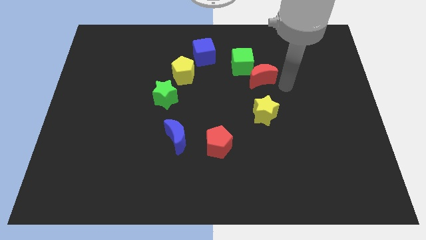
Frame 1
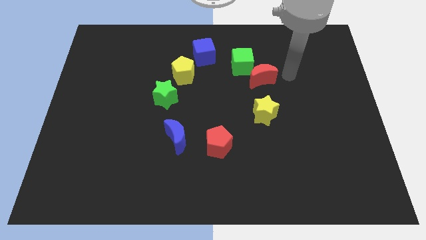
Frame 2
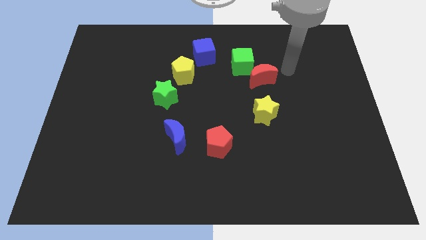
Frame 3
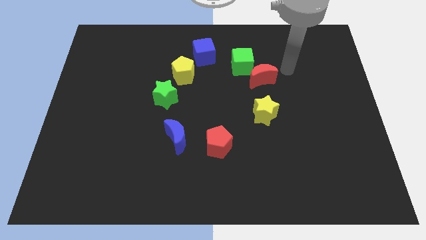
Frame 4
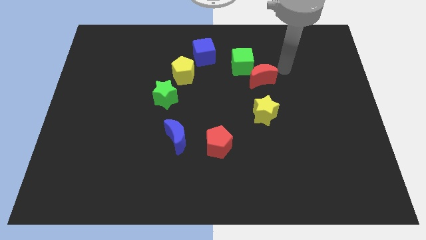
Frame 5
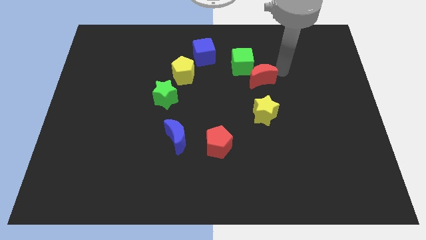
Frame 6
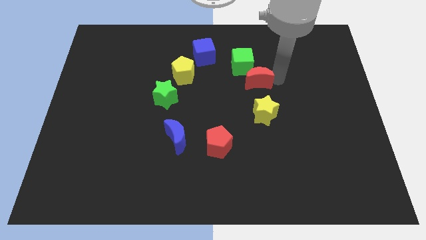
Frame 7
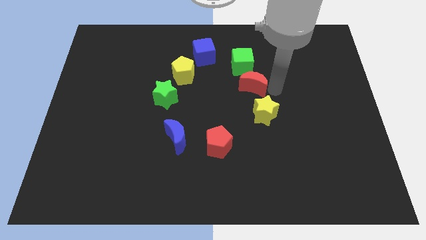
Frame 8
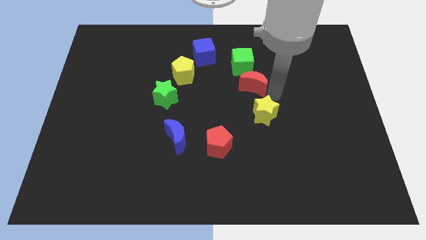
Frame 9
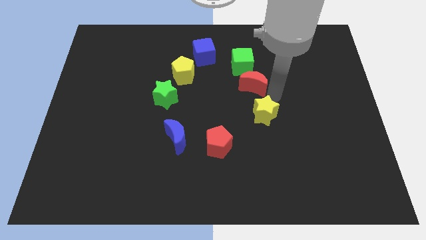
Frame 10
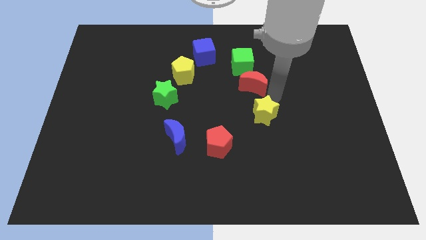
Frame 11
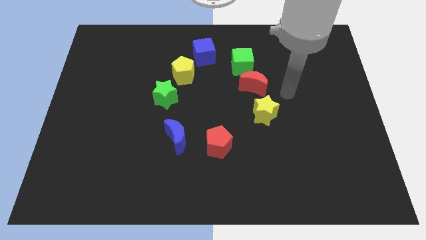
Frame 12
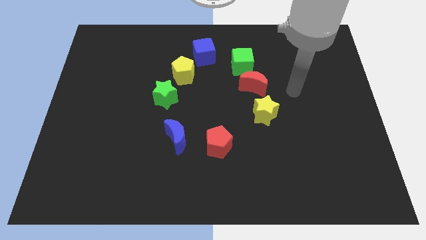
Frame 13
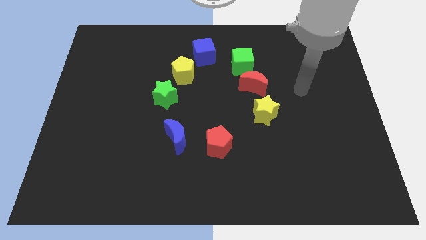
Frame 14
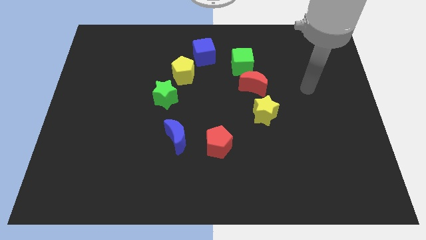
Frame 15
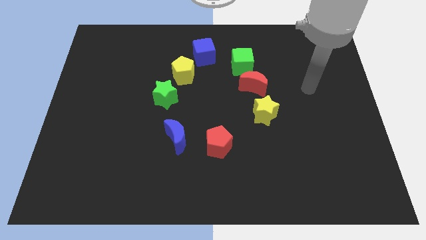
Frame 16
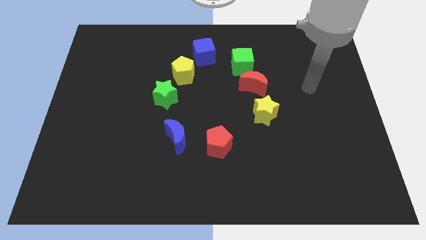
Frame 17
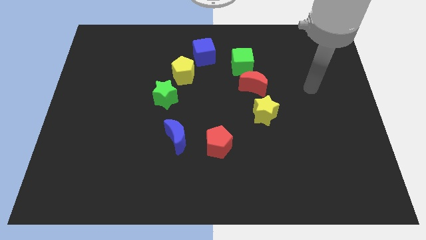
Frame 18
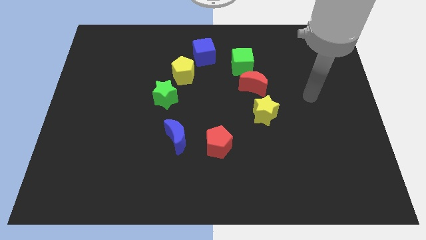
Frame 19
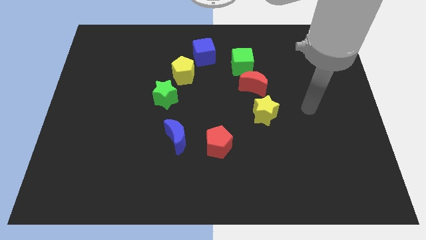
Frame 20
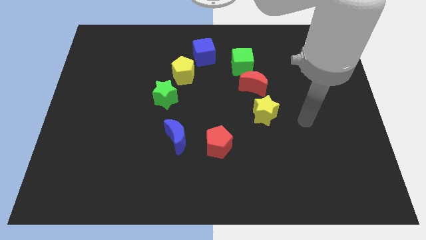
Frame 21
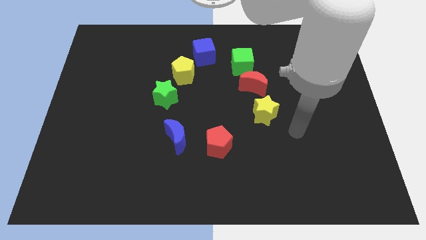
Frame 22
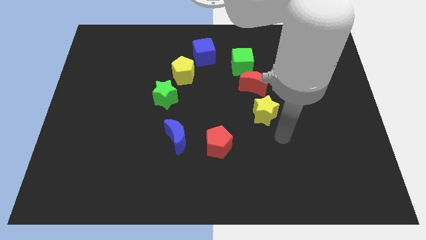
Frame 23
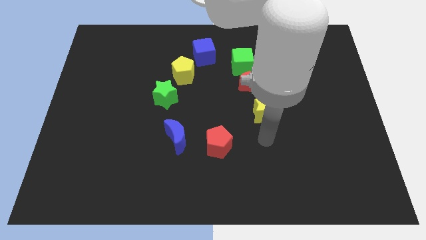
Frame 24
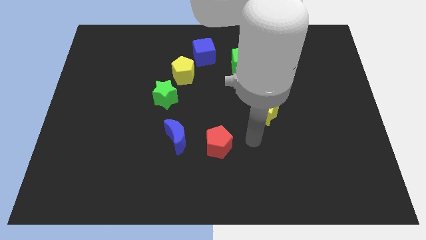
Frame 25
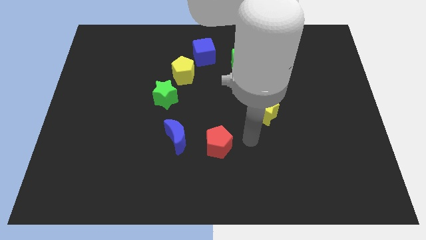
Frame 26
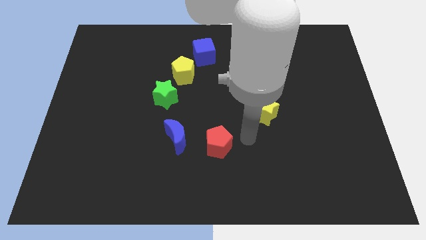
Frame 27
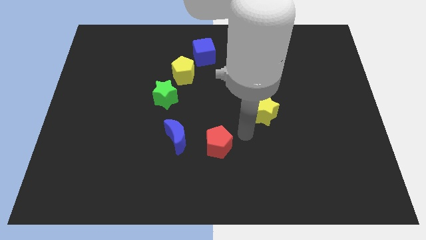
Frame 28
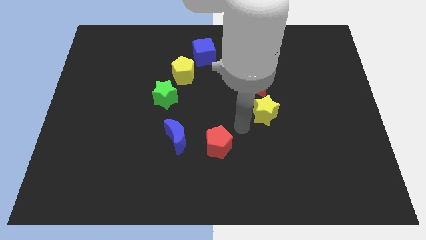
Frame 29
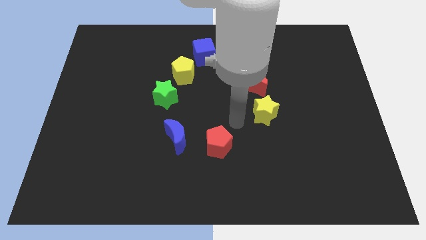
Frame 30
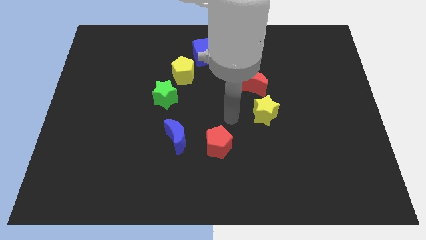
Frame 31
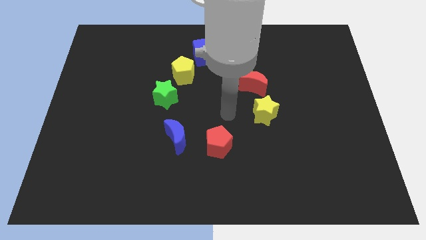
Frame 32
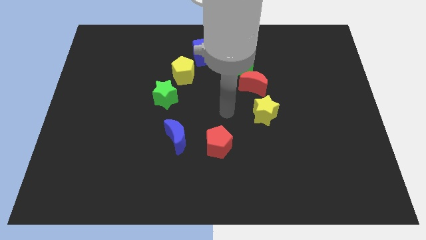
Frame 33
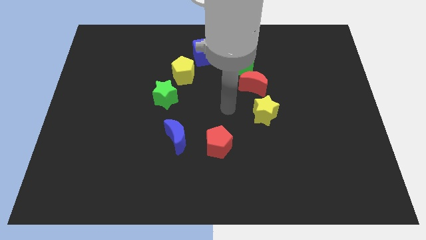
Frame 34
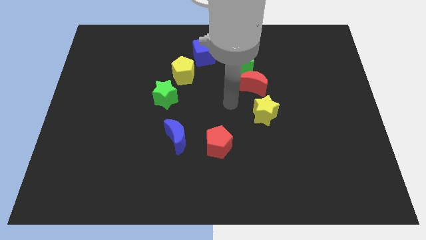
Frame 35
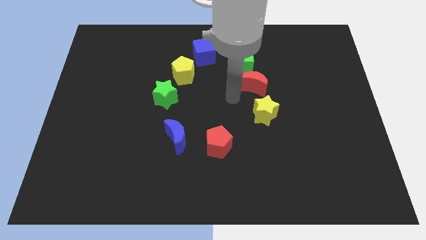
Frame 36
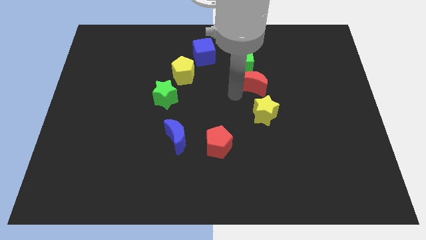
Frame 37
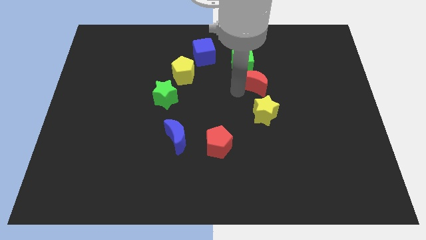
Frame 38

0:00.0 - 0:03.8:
place the arm left to the red moon

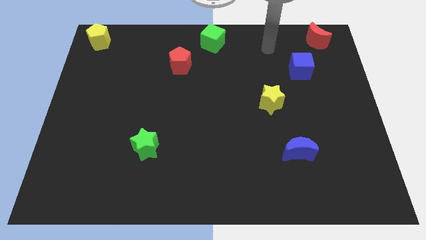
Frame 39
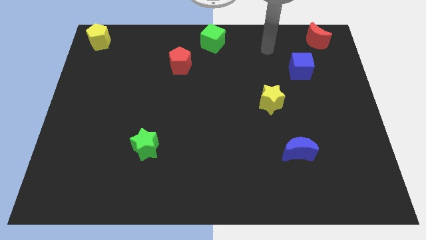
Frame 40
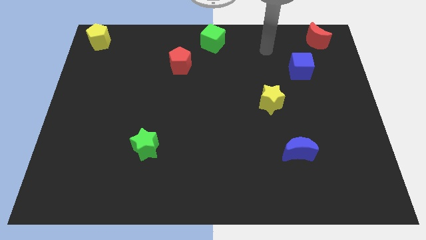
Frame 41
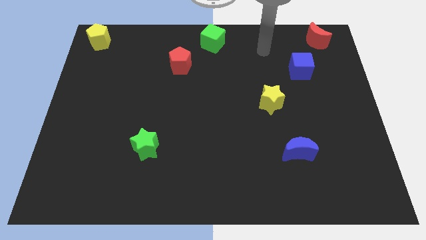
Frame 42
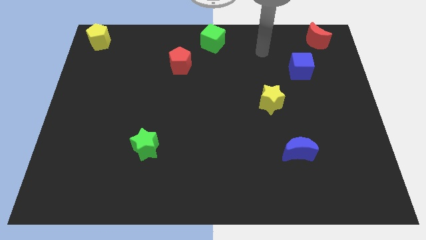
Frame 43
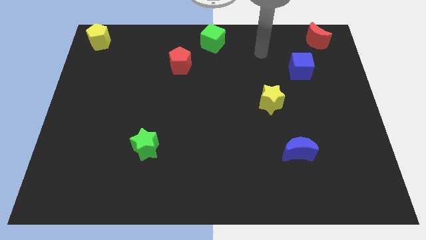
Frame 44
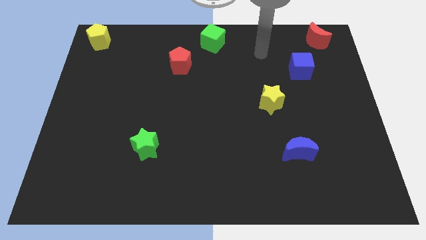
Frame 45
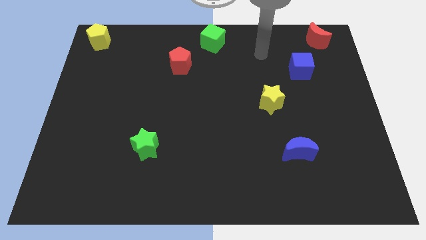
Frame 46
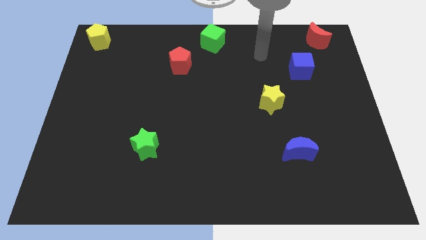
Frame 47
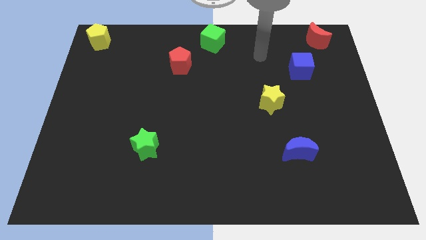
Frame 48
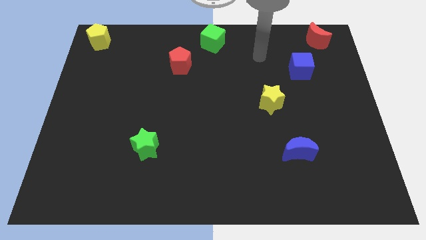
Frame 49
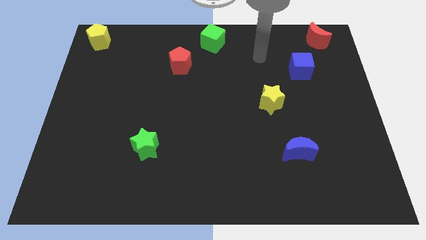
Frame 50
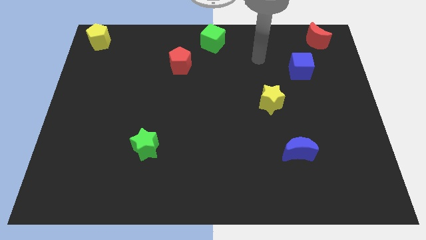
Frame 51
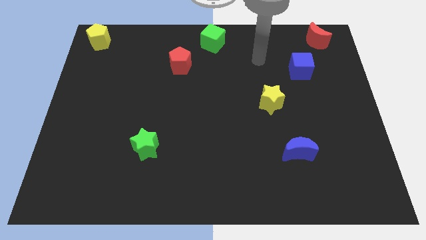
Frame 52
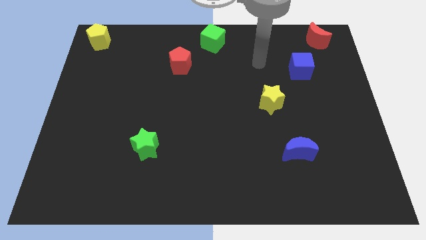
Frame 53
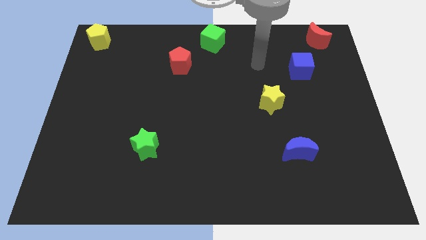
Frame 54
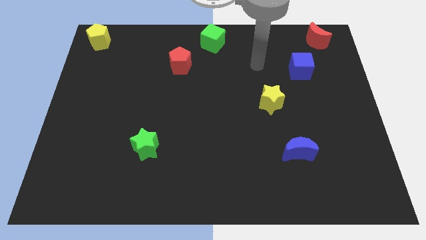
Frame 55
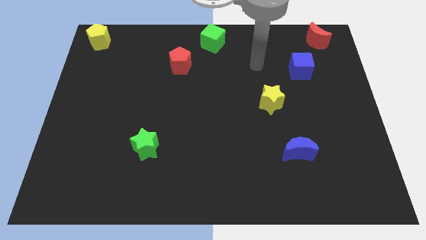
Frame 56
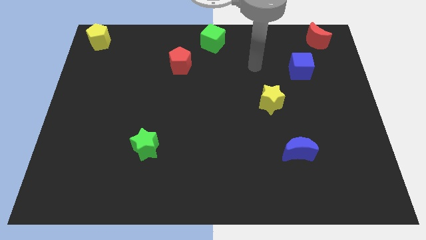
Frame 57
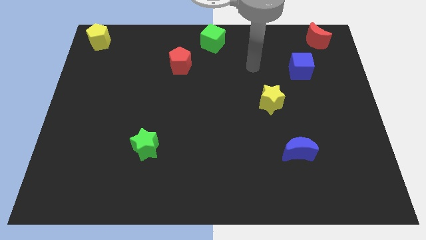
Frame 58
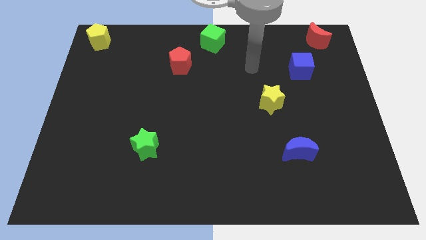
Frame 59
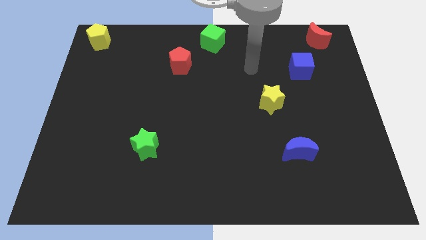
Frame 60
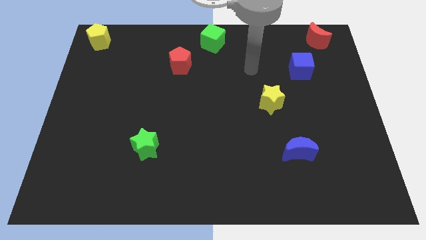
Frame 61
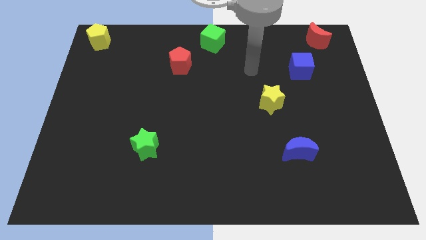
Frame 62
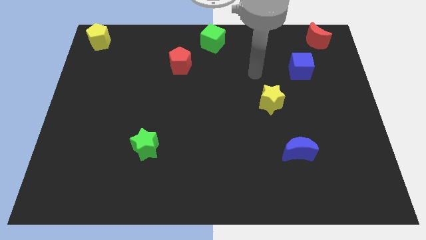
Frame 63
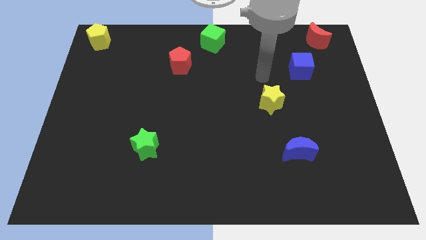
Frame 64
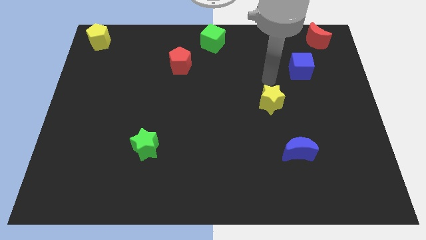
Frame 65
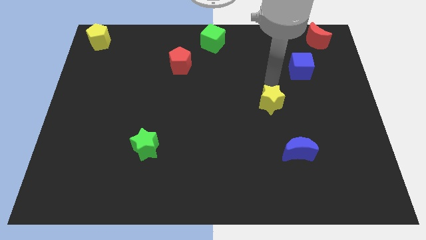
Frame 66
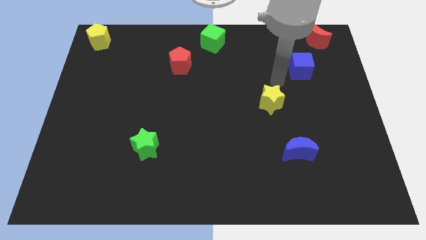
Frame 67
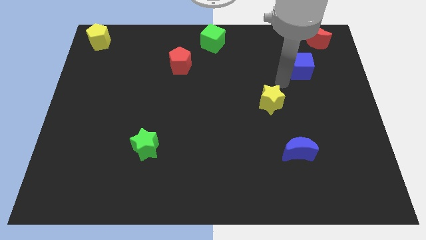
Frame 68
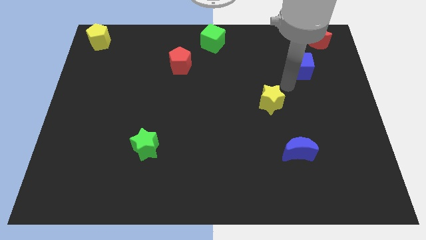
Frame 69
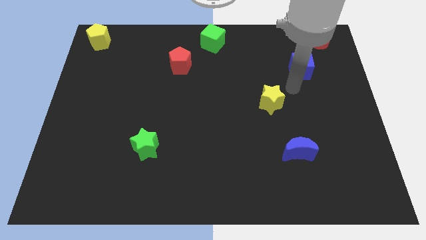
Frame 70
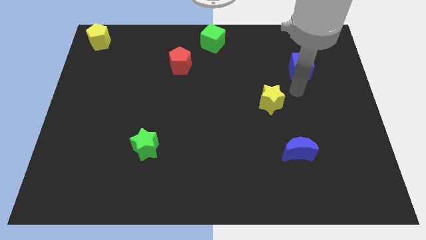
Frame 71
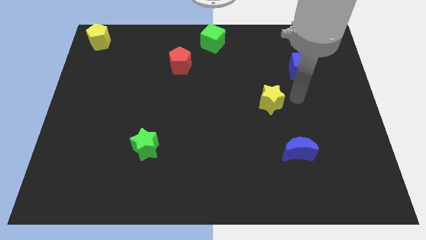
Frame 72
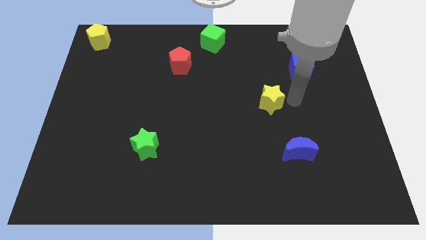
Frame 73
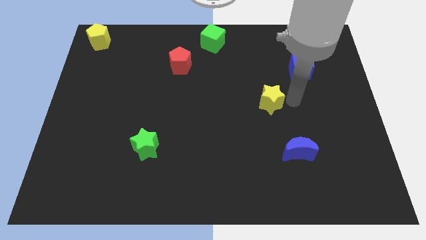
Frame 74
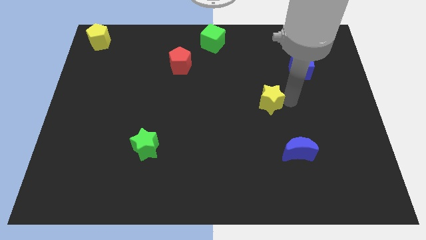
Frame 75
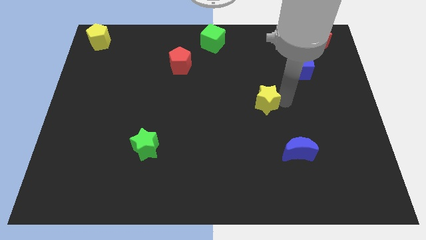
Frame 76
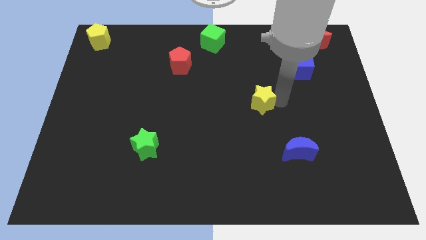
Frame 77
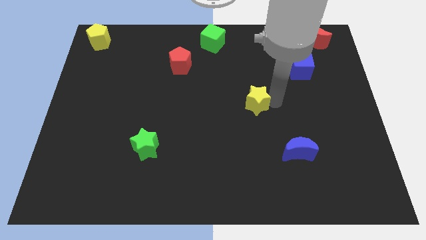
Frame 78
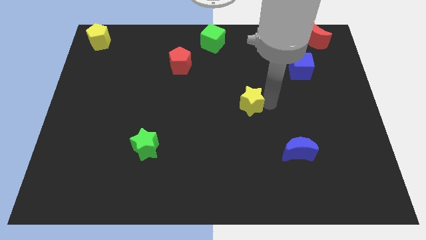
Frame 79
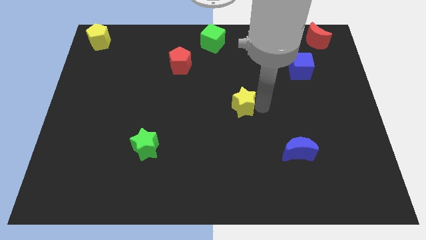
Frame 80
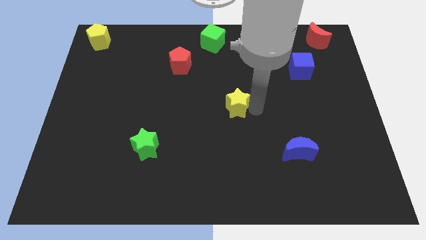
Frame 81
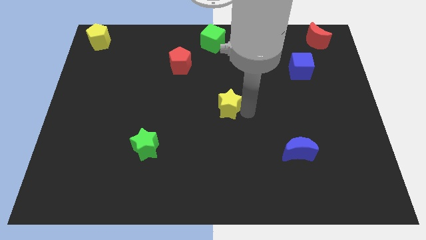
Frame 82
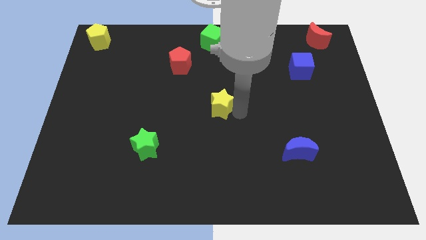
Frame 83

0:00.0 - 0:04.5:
place the yellow star at the center of the board

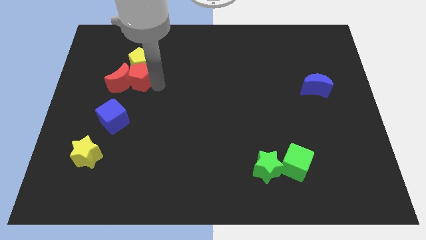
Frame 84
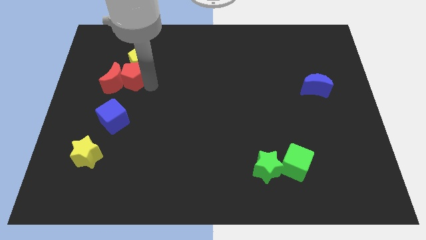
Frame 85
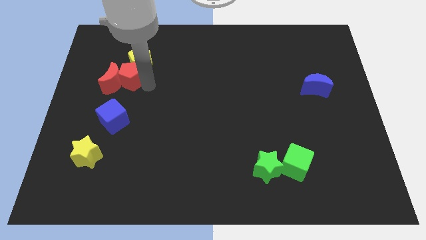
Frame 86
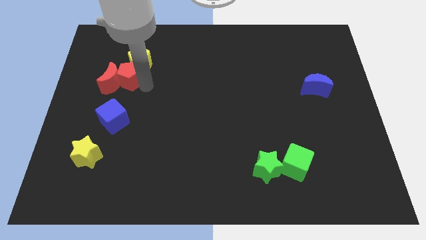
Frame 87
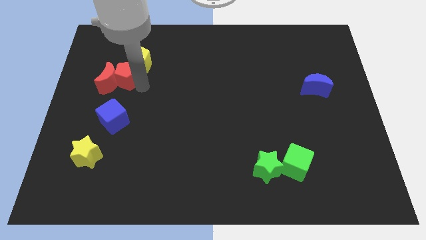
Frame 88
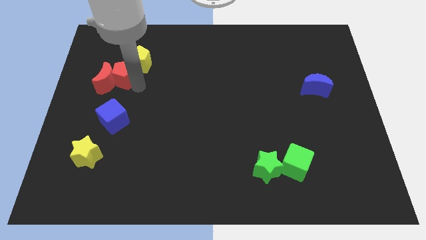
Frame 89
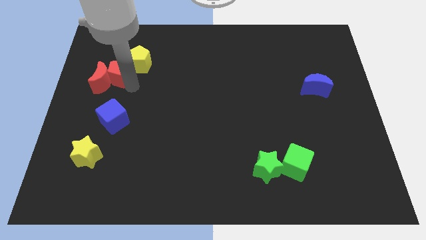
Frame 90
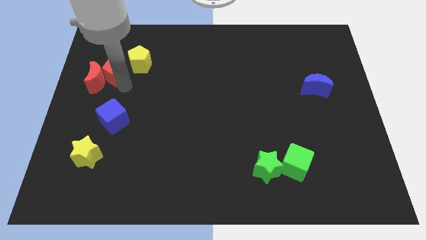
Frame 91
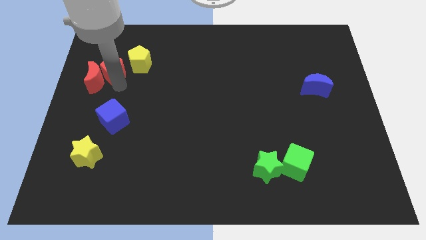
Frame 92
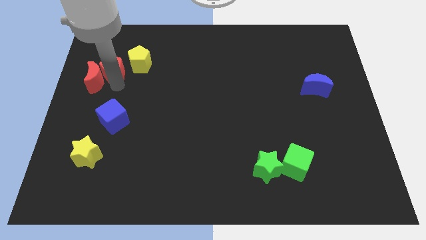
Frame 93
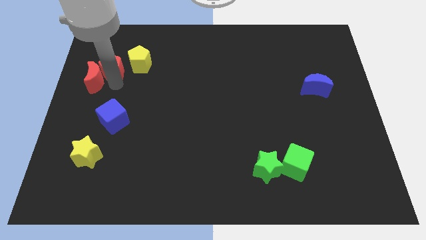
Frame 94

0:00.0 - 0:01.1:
put red pentagon in between red moon and yellow pentagon
